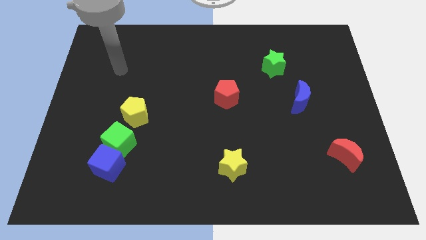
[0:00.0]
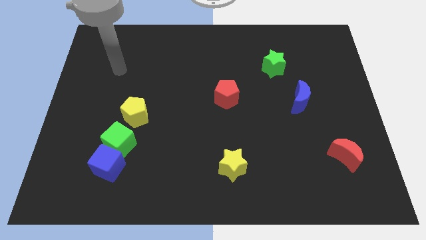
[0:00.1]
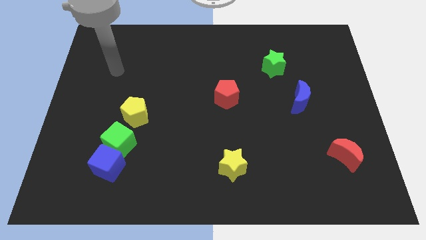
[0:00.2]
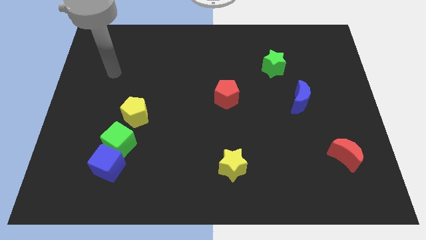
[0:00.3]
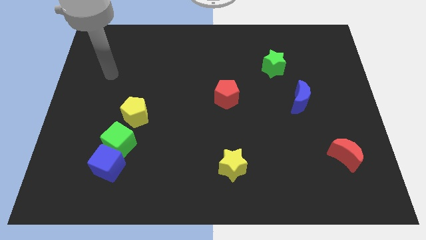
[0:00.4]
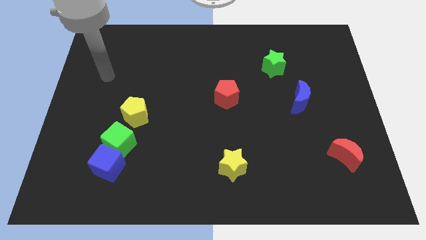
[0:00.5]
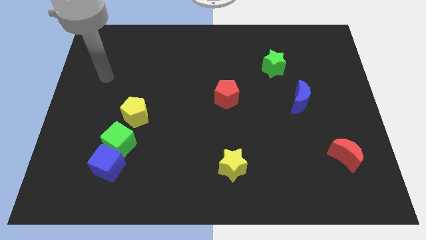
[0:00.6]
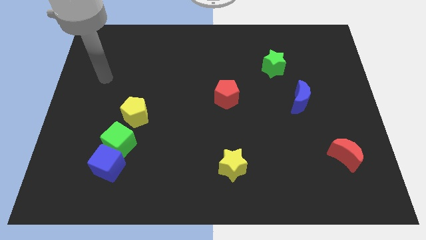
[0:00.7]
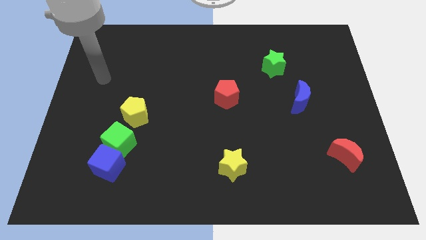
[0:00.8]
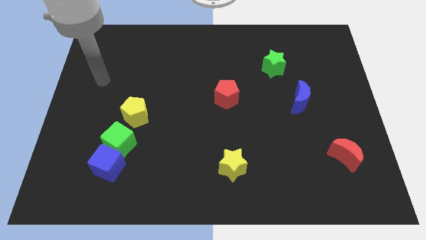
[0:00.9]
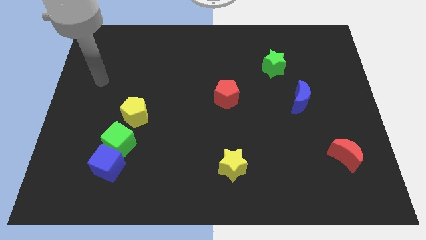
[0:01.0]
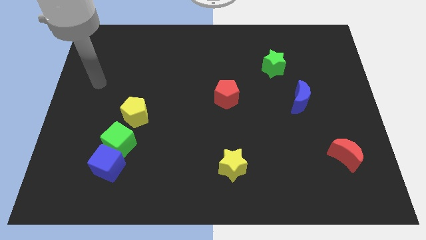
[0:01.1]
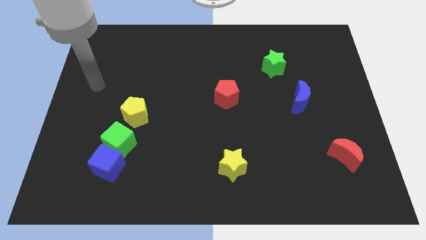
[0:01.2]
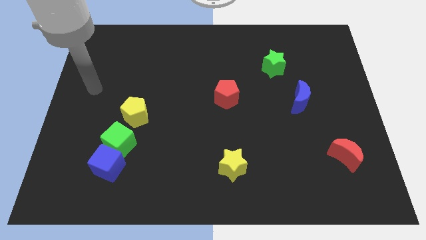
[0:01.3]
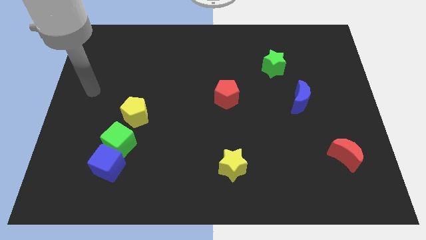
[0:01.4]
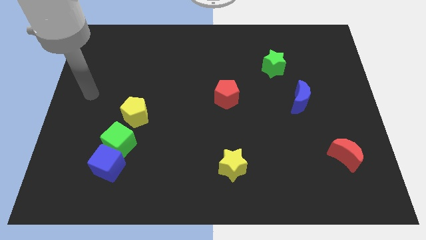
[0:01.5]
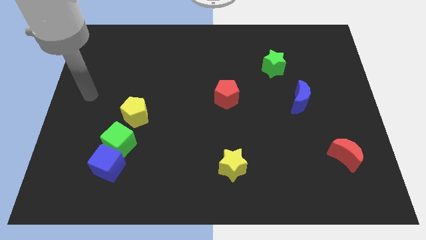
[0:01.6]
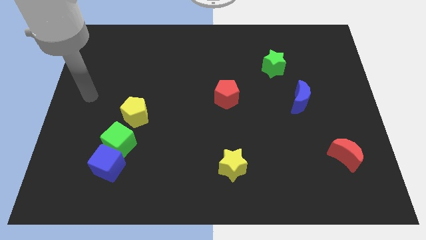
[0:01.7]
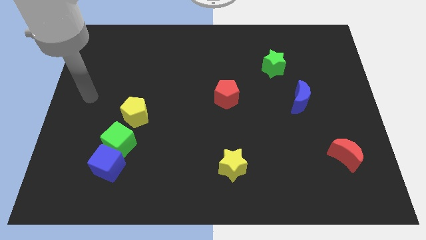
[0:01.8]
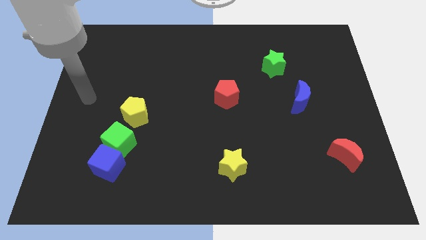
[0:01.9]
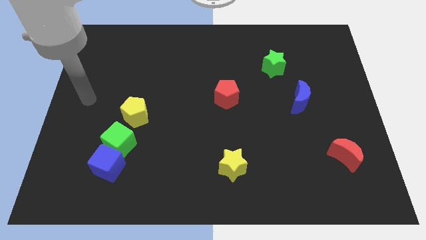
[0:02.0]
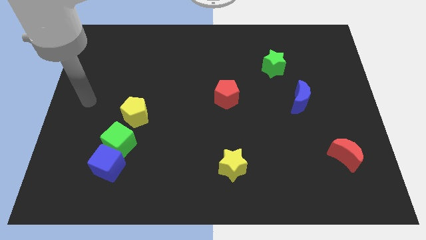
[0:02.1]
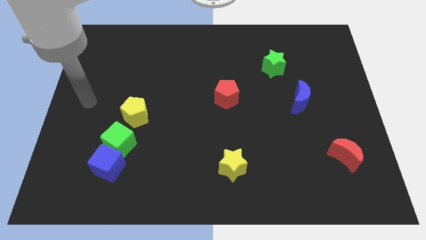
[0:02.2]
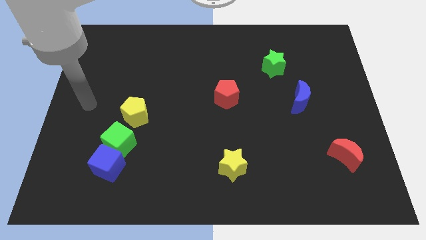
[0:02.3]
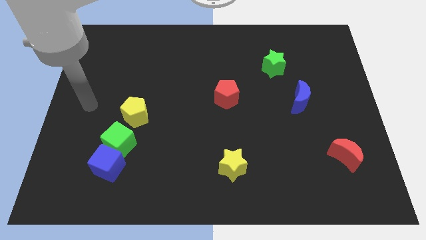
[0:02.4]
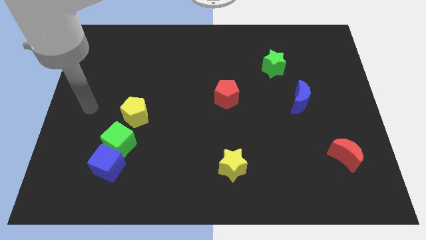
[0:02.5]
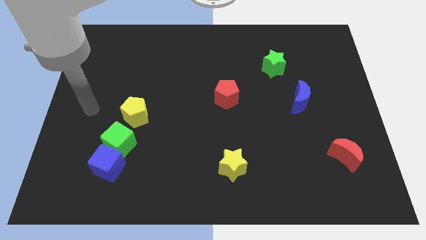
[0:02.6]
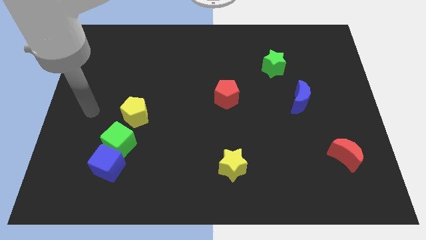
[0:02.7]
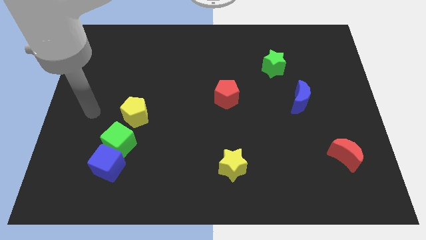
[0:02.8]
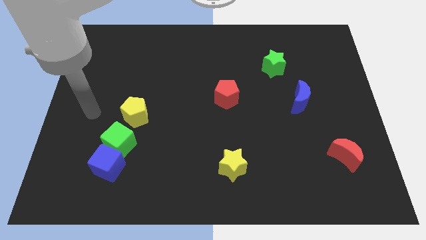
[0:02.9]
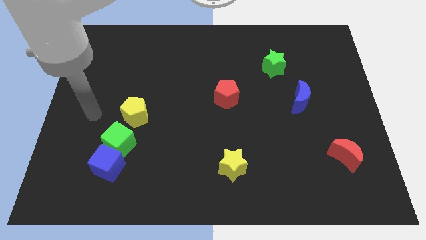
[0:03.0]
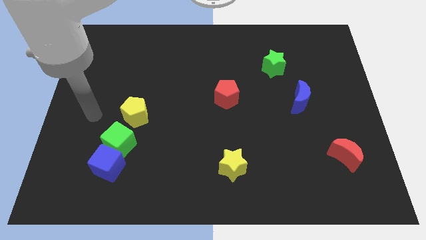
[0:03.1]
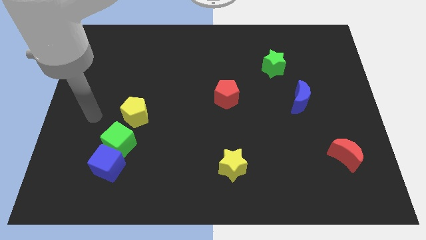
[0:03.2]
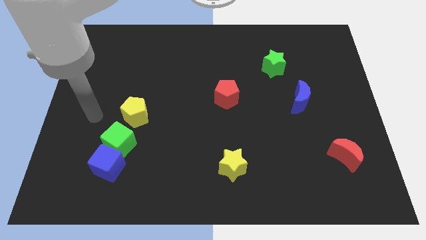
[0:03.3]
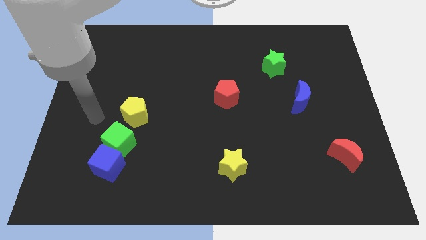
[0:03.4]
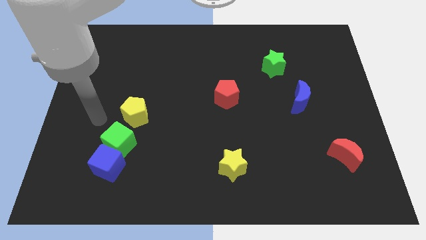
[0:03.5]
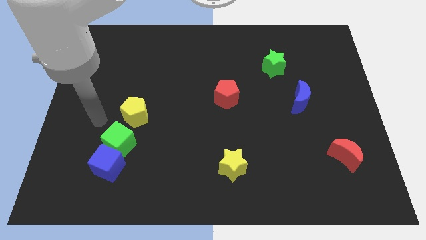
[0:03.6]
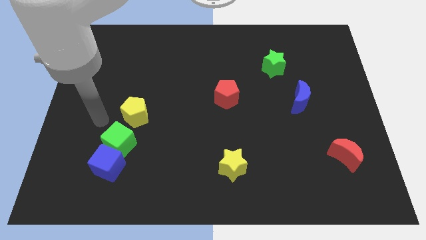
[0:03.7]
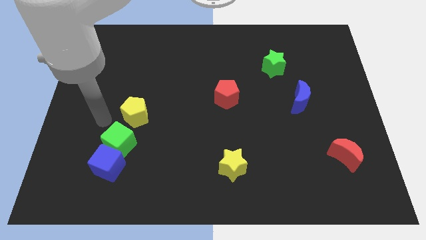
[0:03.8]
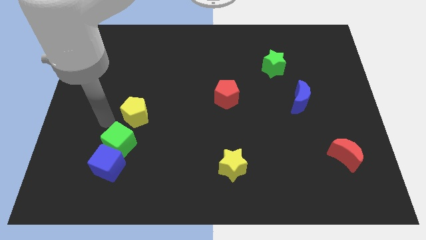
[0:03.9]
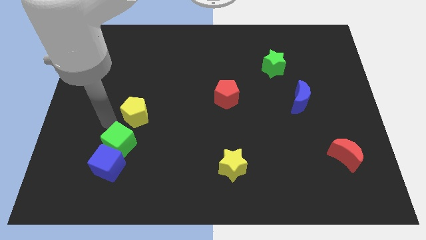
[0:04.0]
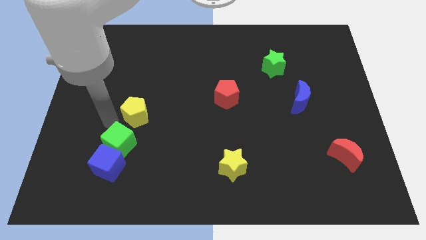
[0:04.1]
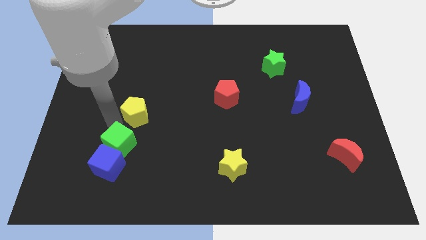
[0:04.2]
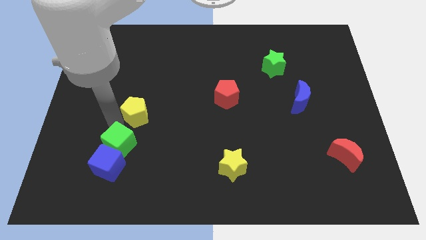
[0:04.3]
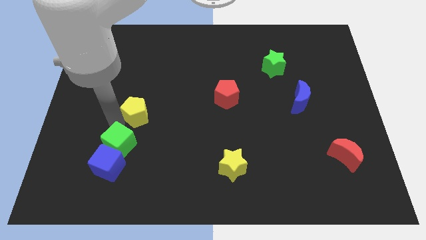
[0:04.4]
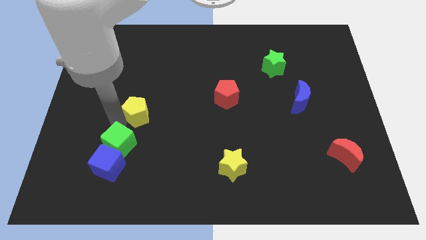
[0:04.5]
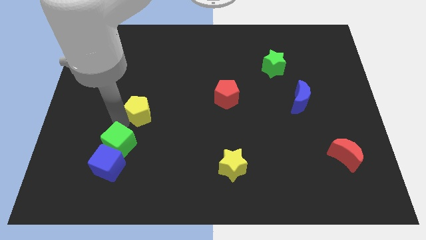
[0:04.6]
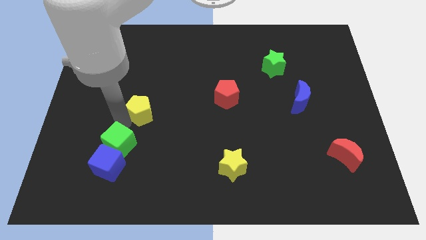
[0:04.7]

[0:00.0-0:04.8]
push the yellow pentagon slightly to the right

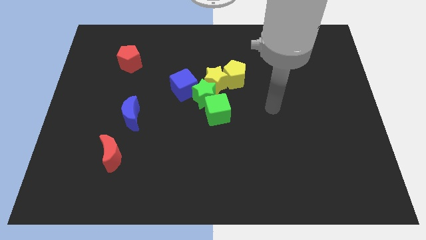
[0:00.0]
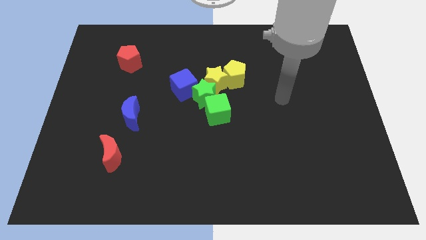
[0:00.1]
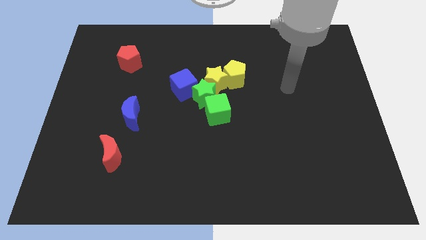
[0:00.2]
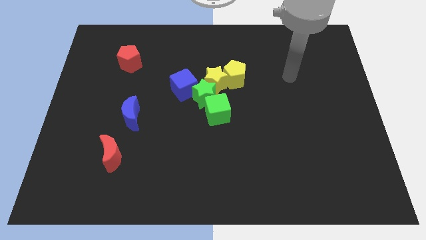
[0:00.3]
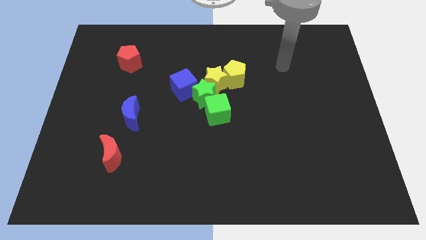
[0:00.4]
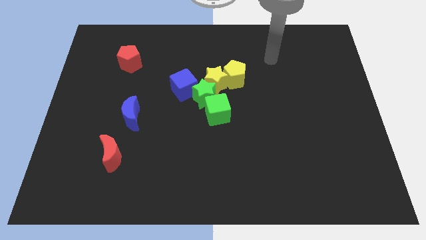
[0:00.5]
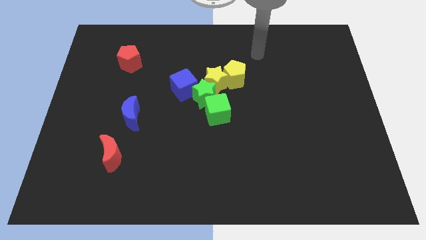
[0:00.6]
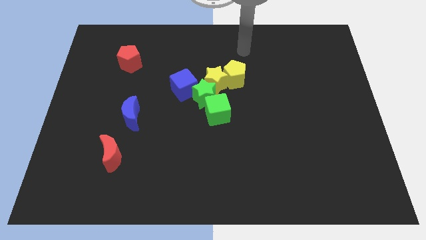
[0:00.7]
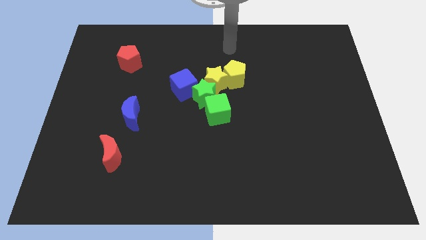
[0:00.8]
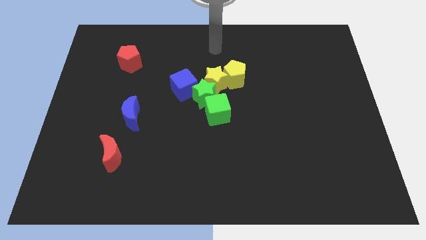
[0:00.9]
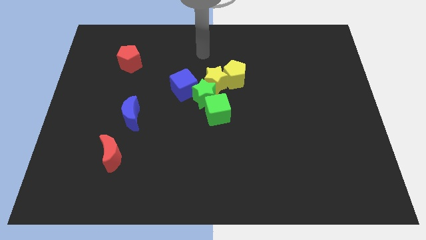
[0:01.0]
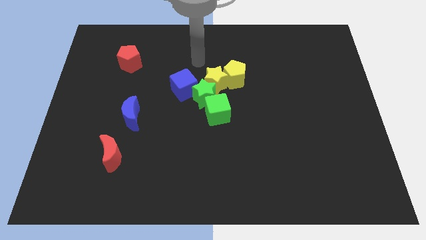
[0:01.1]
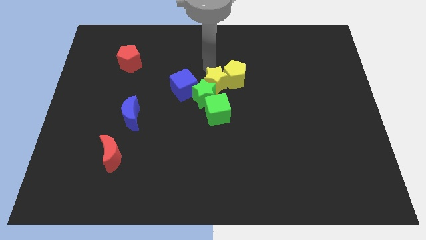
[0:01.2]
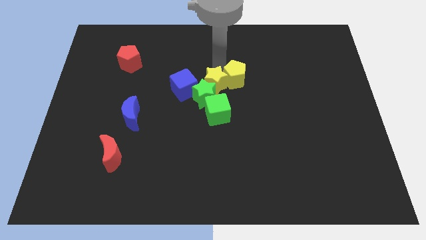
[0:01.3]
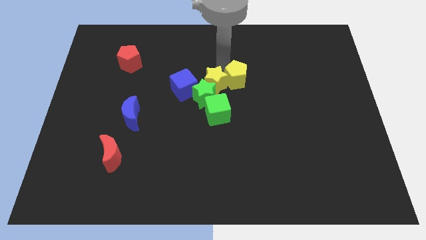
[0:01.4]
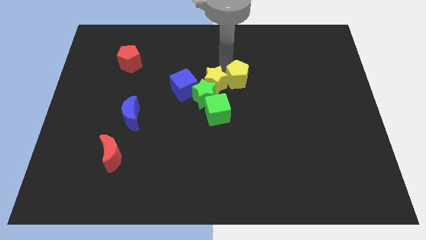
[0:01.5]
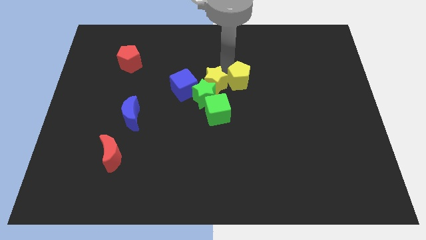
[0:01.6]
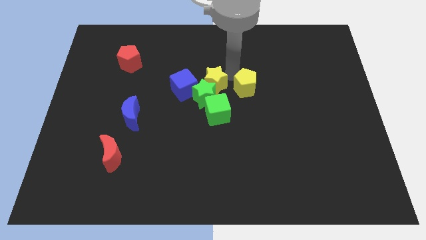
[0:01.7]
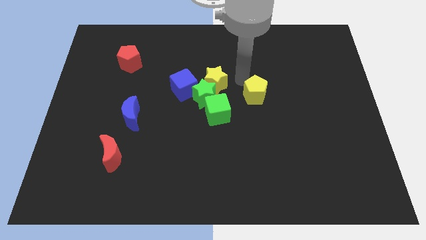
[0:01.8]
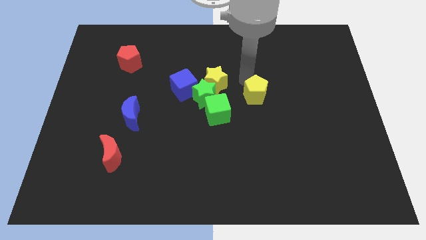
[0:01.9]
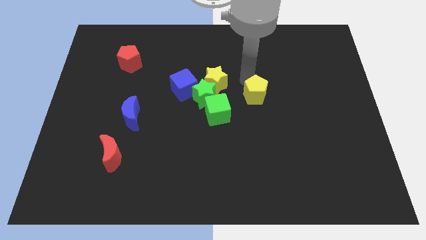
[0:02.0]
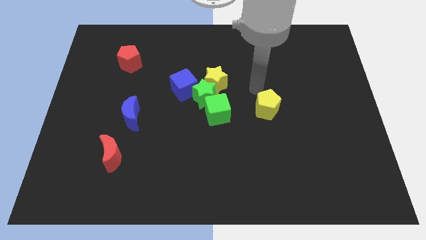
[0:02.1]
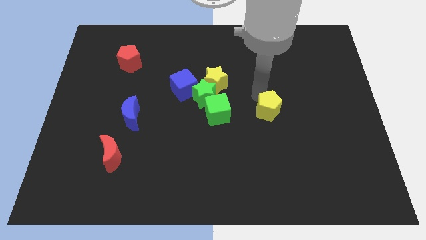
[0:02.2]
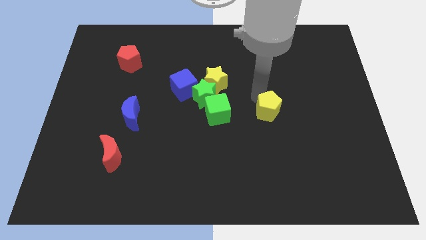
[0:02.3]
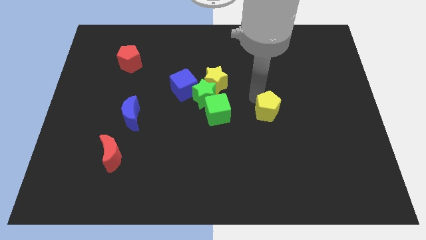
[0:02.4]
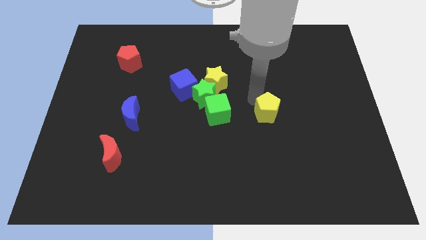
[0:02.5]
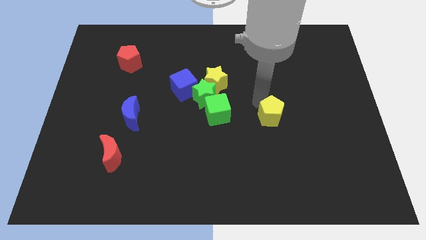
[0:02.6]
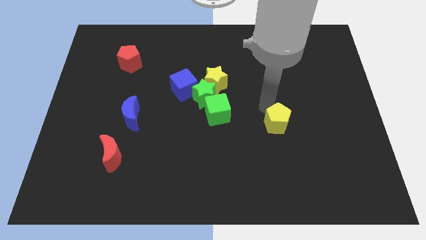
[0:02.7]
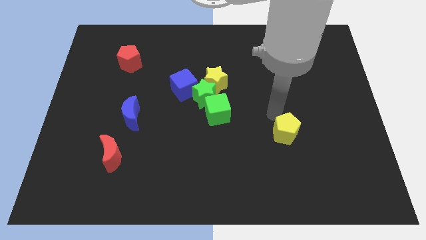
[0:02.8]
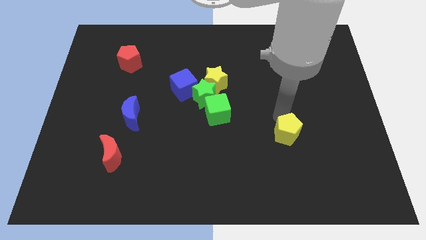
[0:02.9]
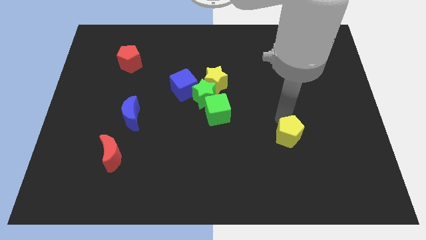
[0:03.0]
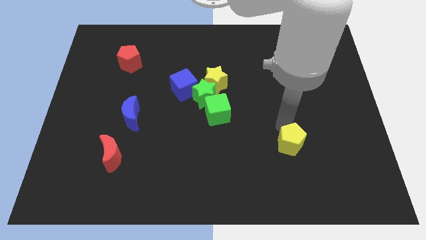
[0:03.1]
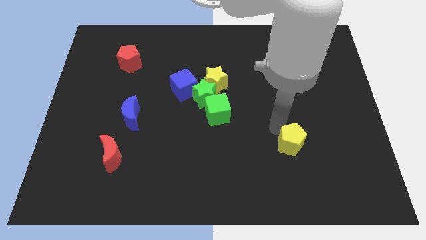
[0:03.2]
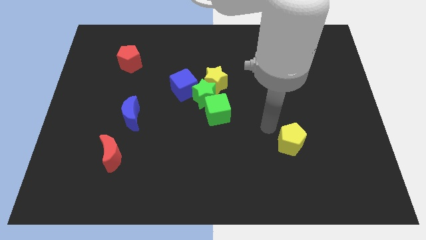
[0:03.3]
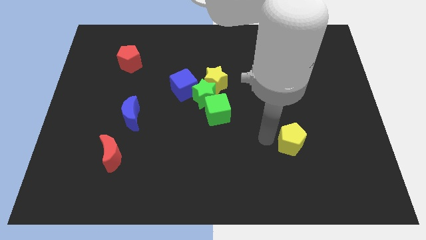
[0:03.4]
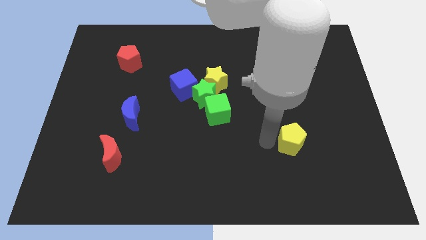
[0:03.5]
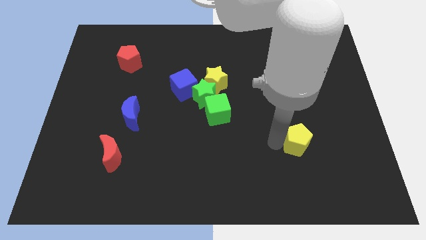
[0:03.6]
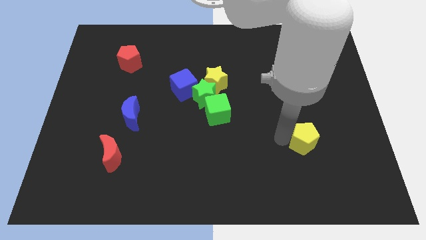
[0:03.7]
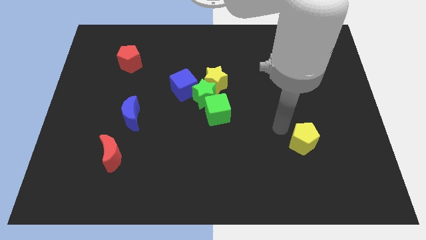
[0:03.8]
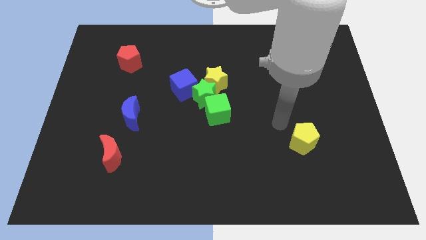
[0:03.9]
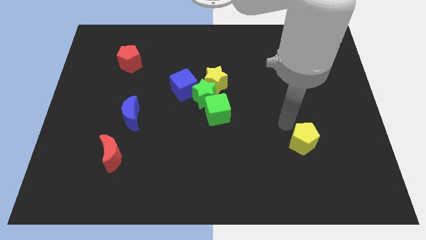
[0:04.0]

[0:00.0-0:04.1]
separate the yellow pentagon from the group of blocks
